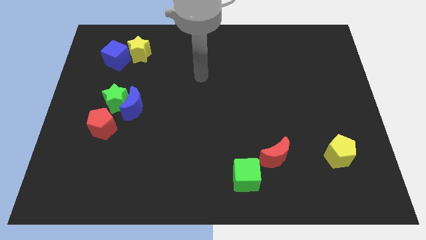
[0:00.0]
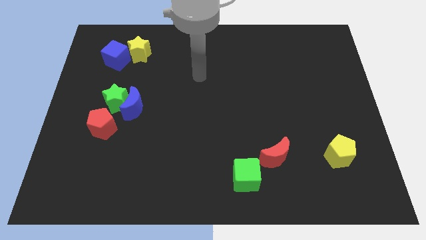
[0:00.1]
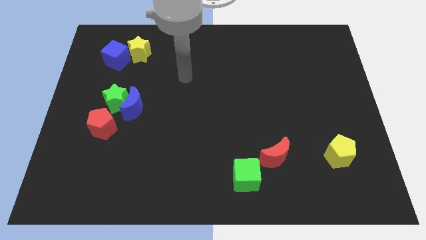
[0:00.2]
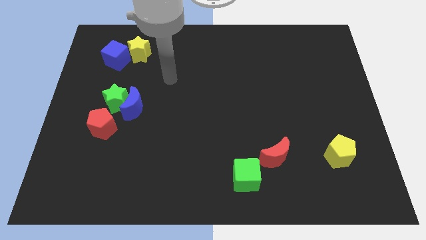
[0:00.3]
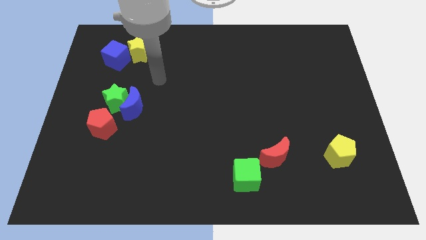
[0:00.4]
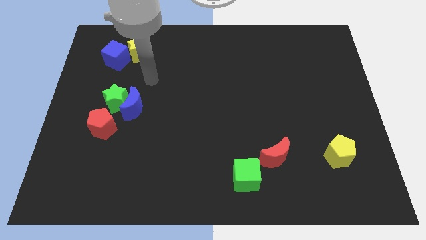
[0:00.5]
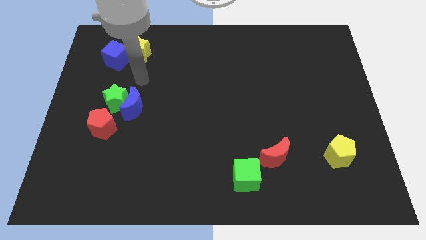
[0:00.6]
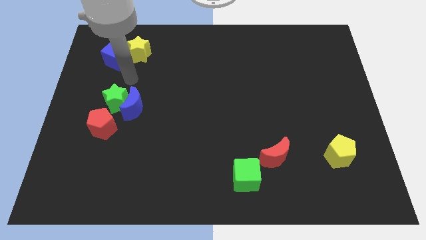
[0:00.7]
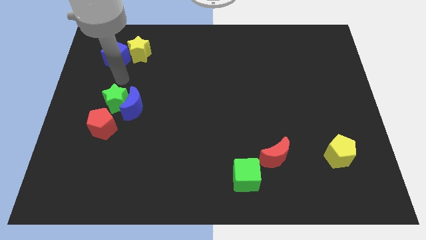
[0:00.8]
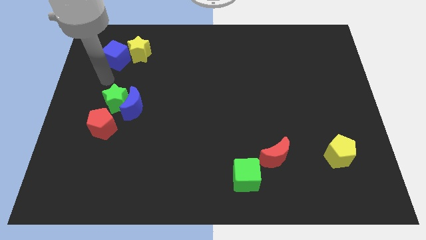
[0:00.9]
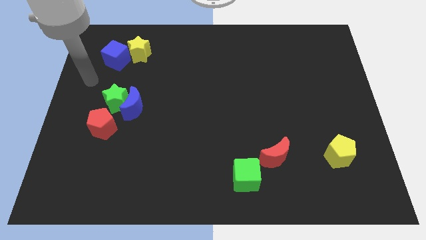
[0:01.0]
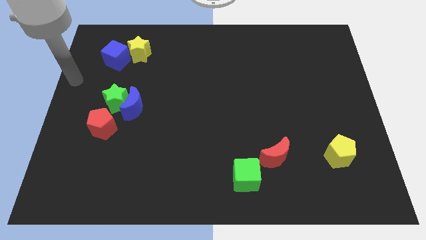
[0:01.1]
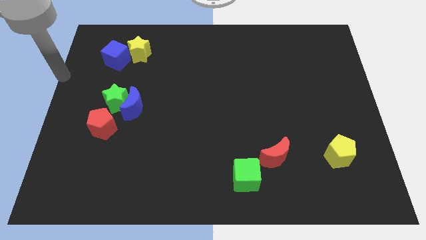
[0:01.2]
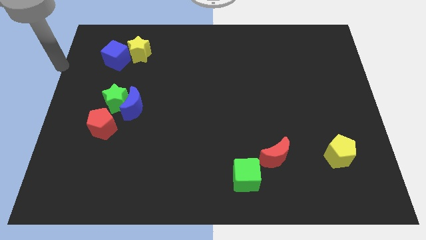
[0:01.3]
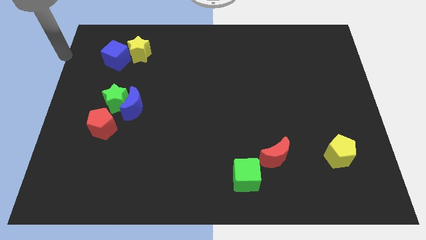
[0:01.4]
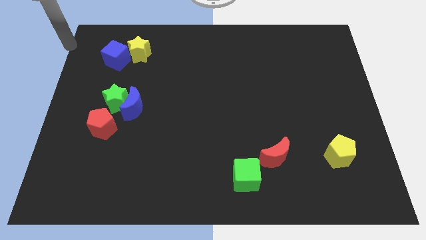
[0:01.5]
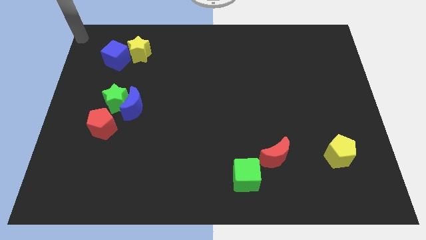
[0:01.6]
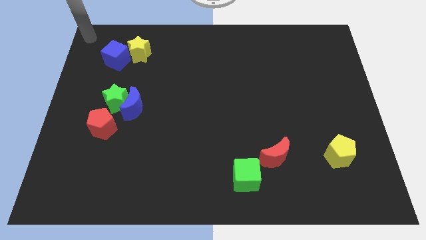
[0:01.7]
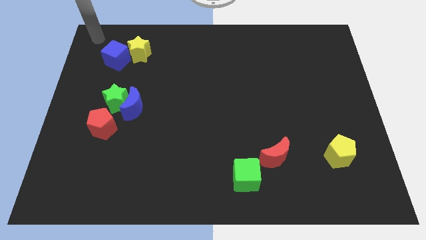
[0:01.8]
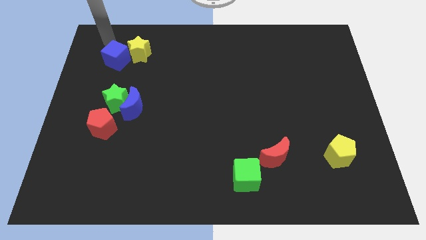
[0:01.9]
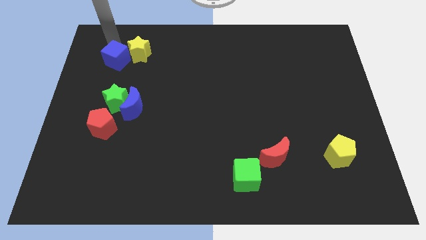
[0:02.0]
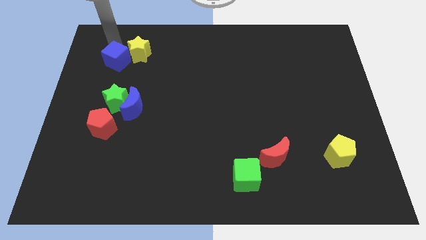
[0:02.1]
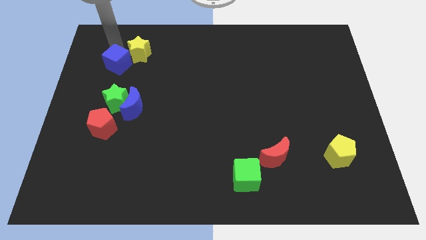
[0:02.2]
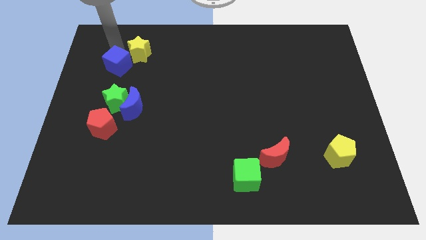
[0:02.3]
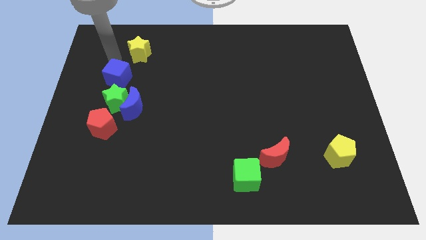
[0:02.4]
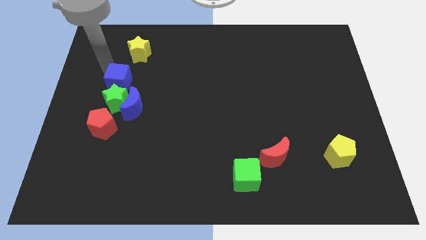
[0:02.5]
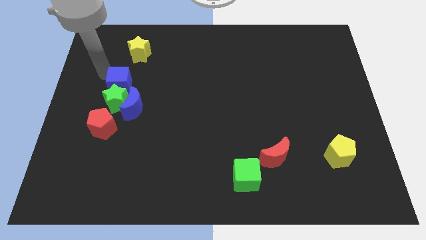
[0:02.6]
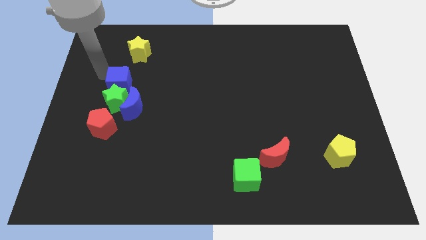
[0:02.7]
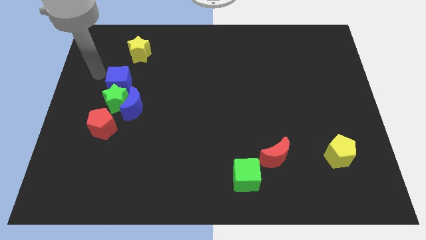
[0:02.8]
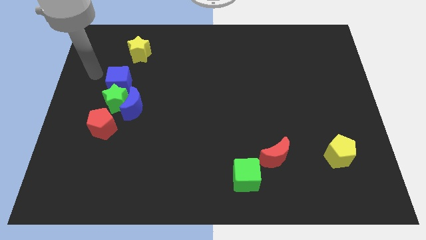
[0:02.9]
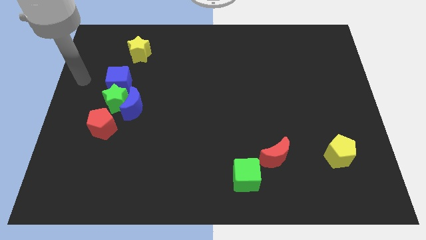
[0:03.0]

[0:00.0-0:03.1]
move the blue cube close to the top side of the green star

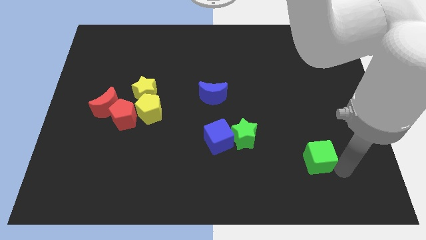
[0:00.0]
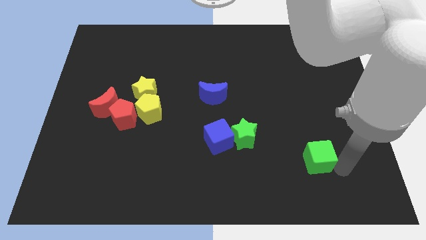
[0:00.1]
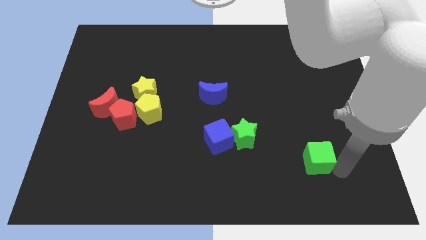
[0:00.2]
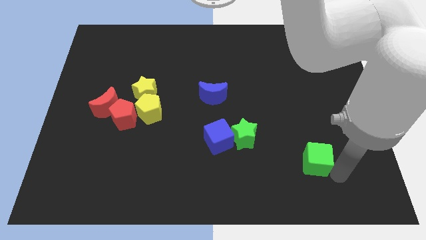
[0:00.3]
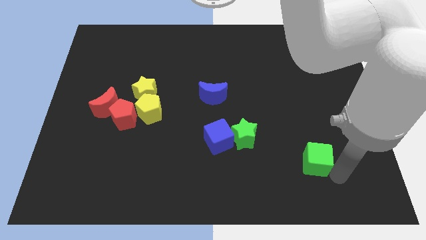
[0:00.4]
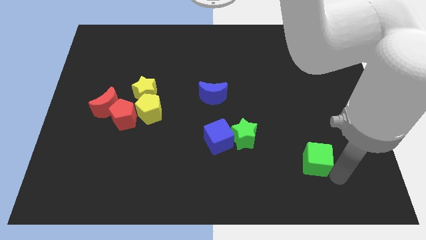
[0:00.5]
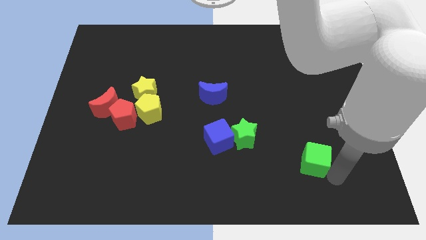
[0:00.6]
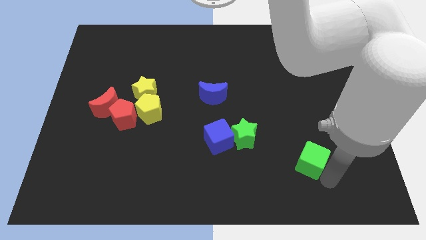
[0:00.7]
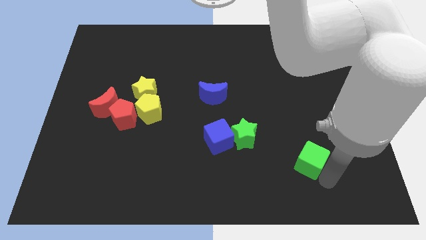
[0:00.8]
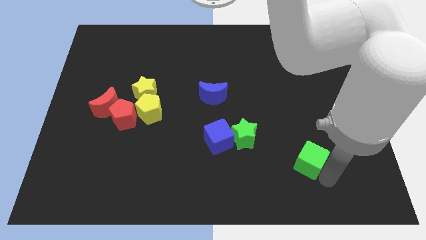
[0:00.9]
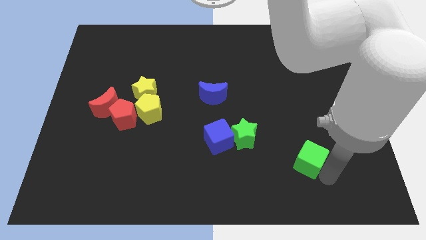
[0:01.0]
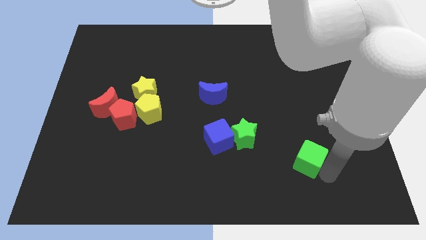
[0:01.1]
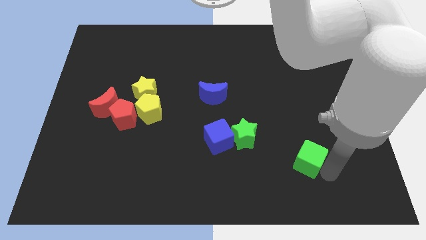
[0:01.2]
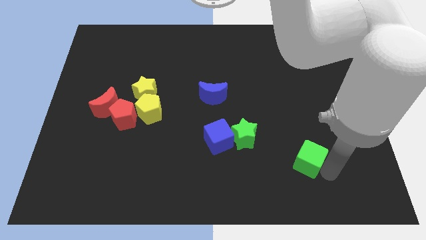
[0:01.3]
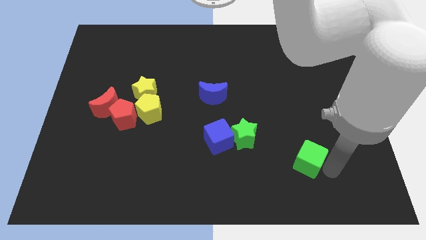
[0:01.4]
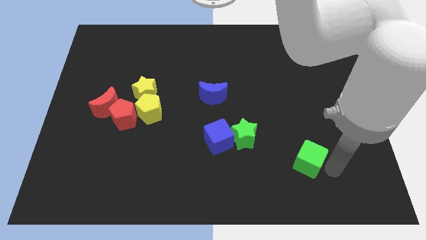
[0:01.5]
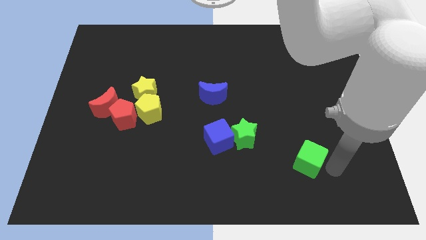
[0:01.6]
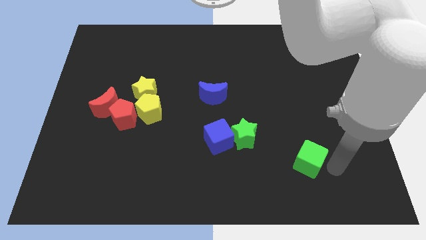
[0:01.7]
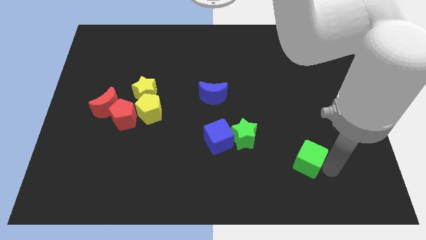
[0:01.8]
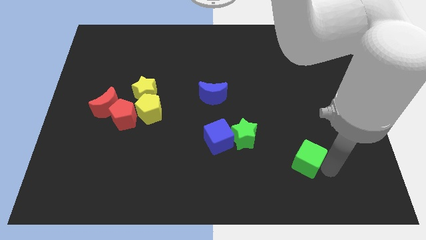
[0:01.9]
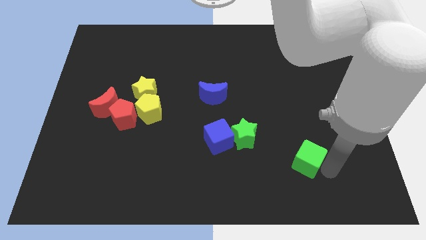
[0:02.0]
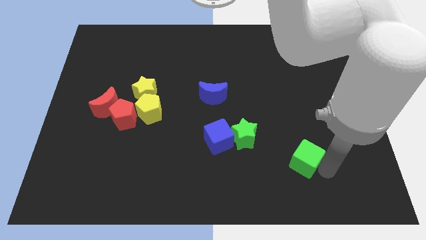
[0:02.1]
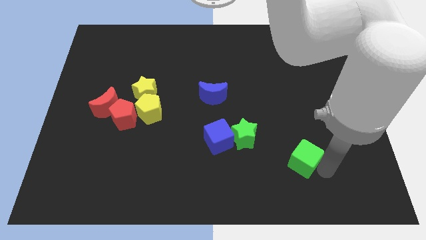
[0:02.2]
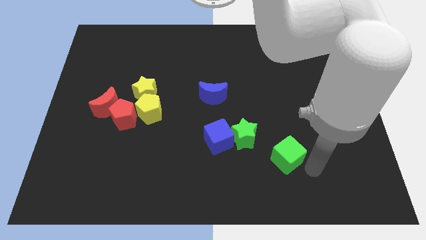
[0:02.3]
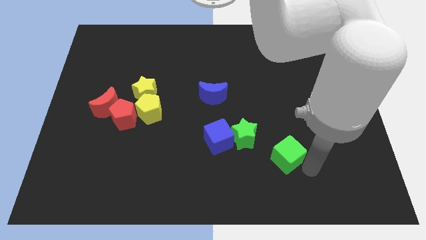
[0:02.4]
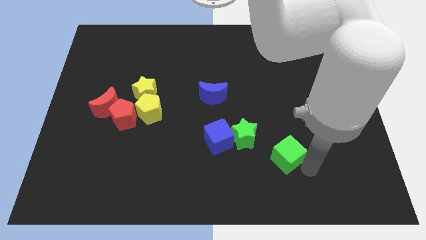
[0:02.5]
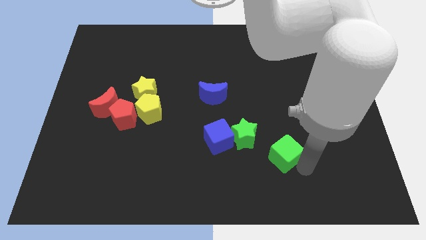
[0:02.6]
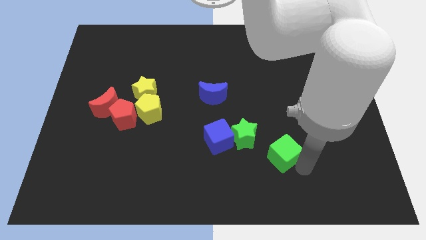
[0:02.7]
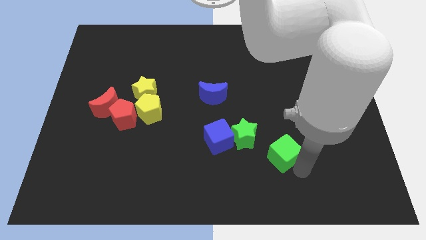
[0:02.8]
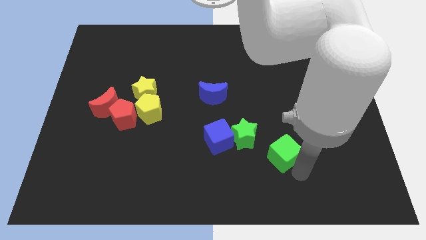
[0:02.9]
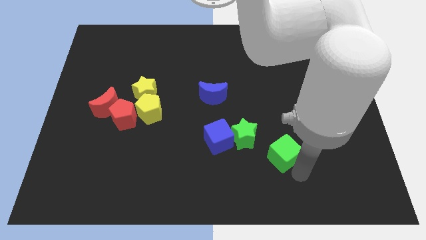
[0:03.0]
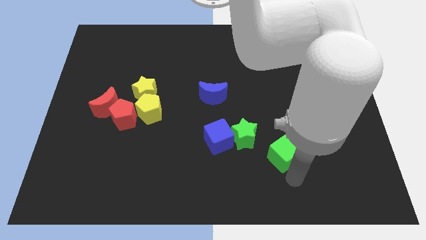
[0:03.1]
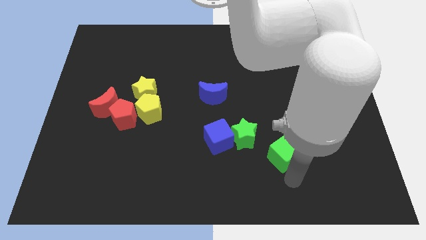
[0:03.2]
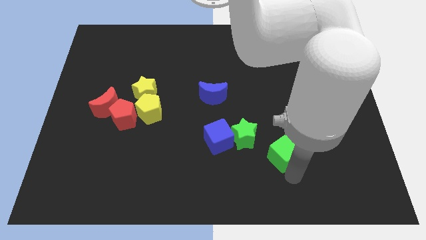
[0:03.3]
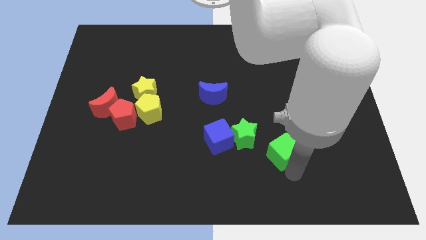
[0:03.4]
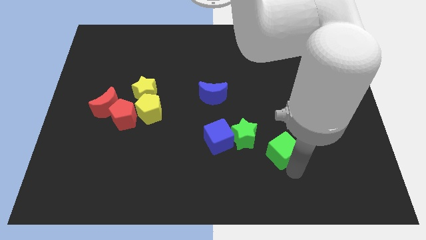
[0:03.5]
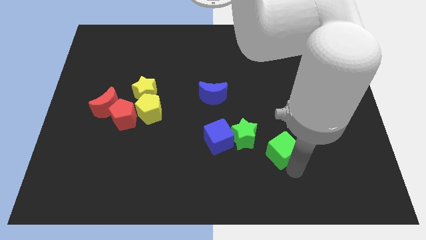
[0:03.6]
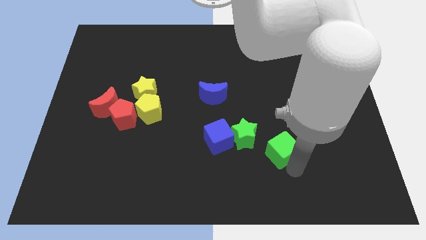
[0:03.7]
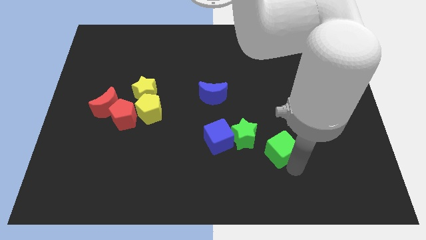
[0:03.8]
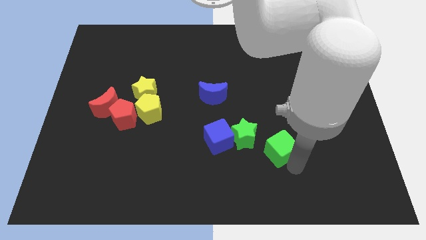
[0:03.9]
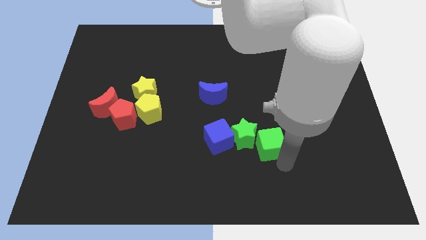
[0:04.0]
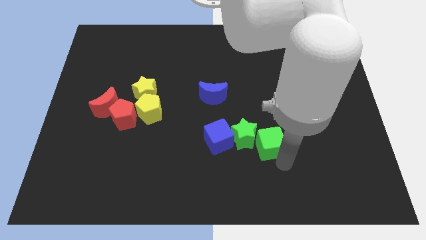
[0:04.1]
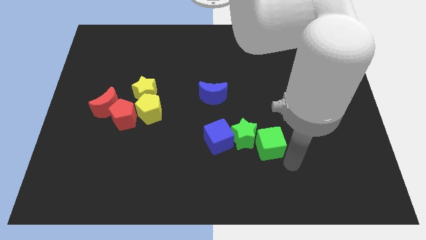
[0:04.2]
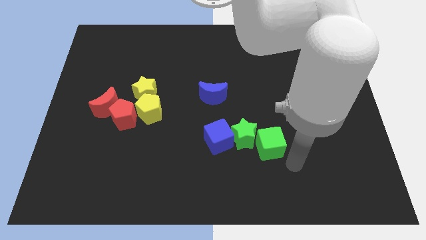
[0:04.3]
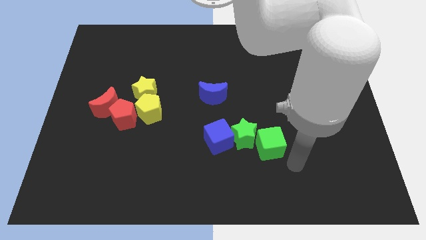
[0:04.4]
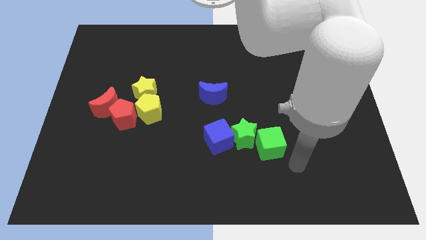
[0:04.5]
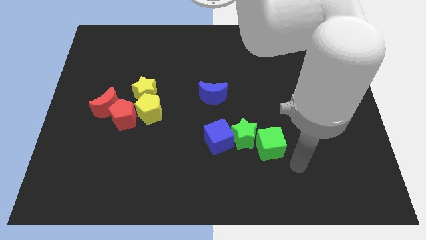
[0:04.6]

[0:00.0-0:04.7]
move the green cube to the right of the green star

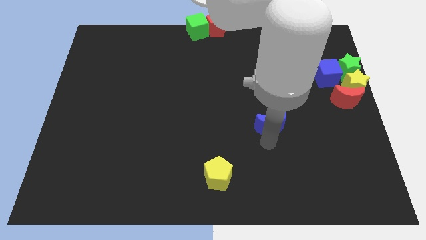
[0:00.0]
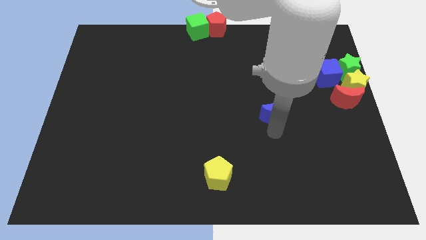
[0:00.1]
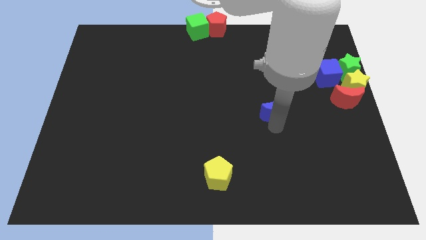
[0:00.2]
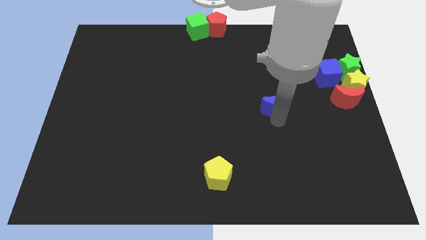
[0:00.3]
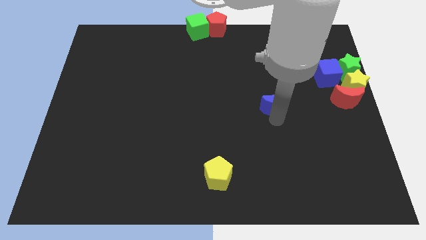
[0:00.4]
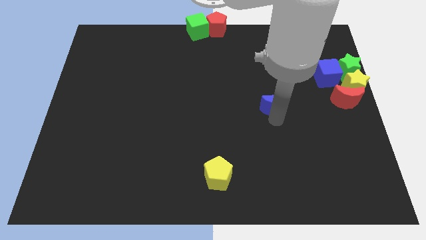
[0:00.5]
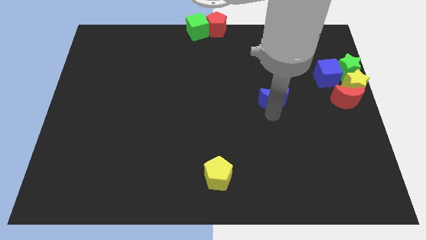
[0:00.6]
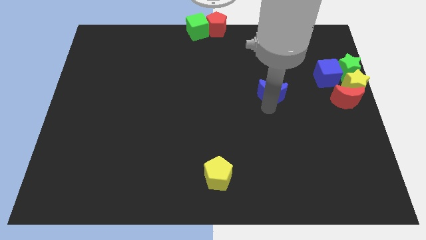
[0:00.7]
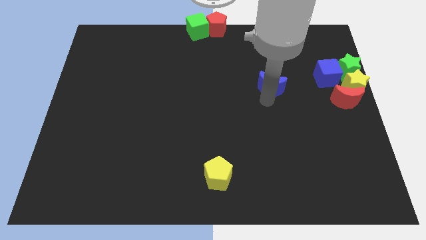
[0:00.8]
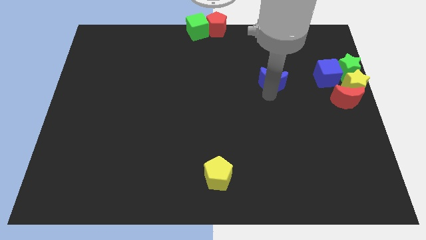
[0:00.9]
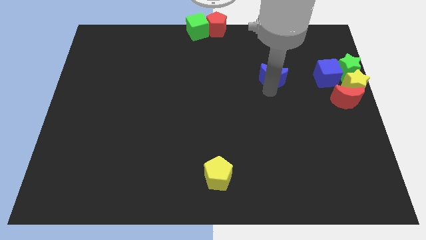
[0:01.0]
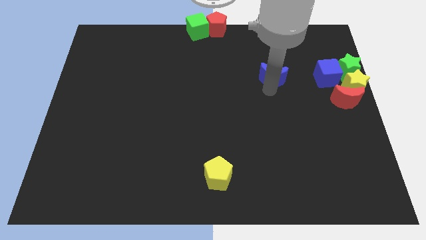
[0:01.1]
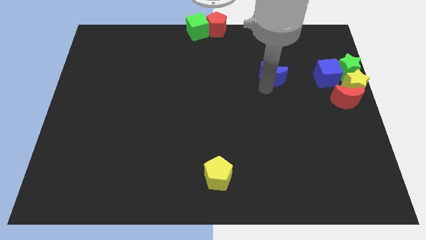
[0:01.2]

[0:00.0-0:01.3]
push the blue crescent to the left of the blue cube
